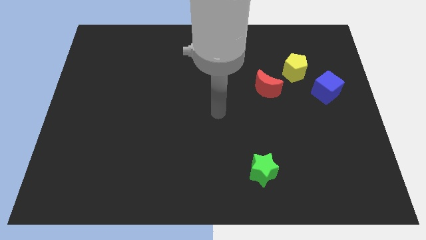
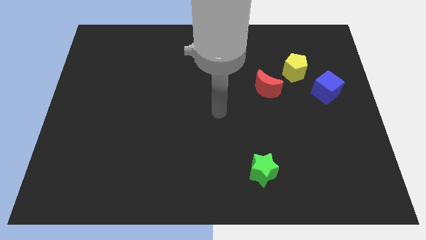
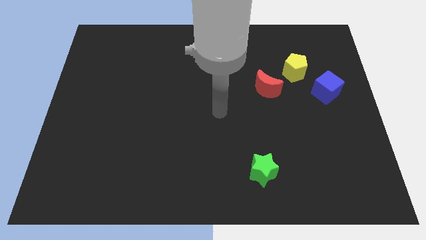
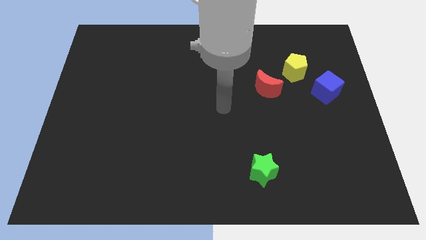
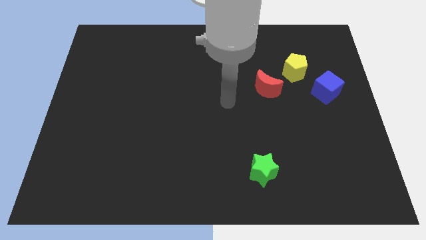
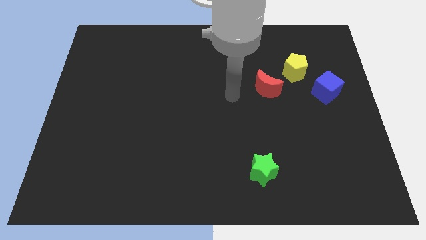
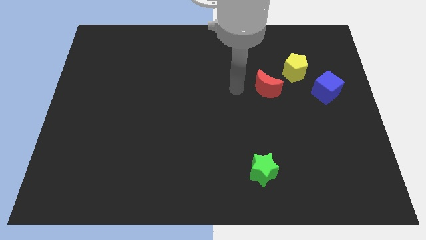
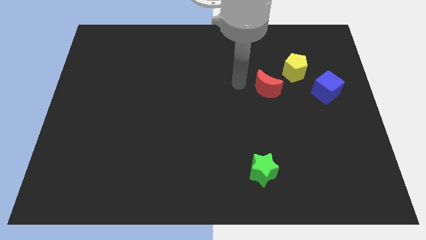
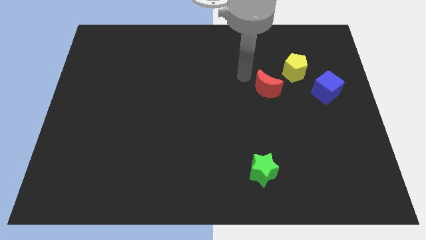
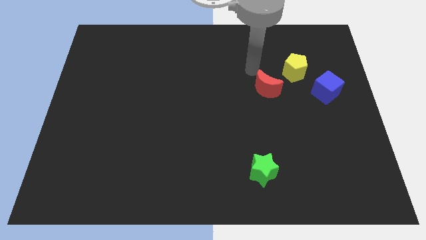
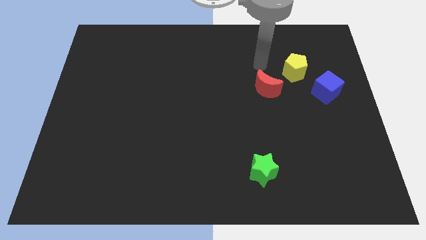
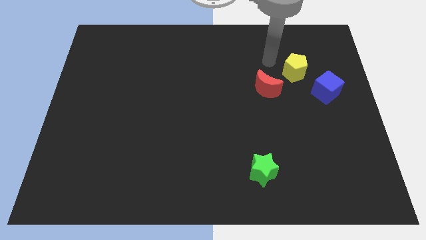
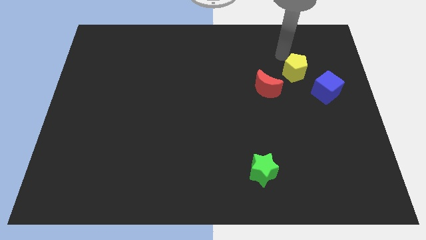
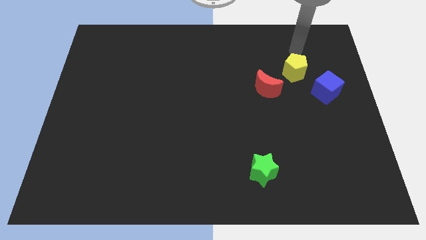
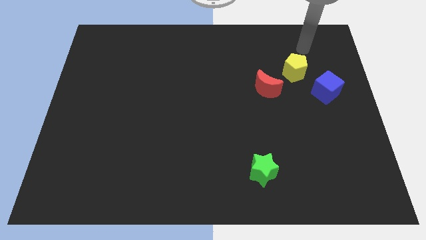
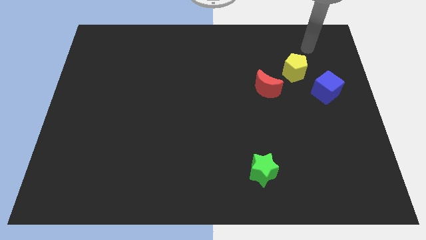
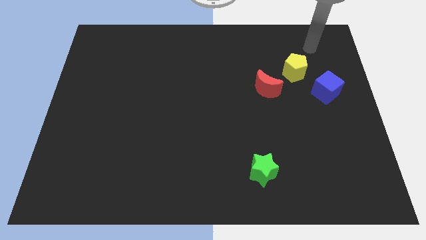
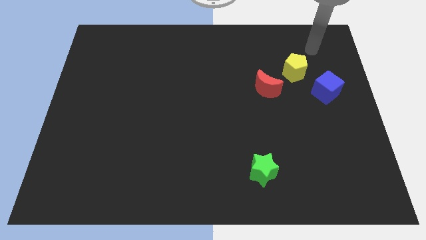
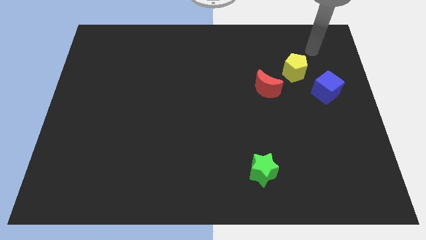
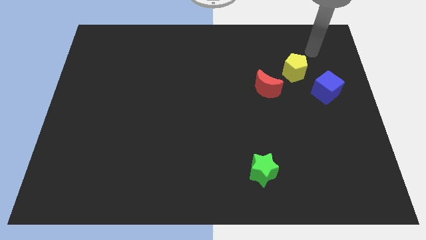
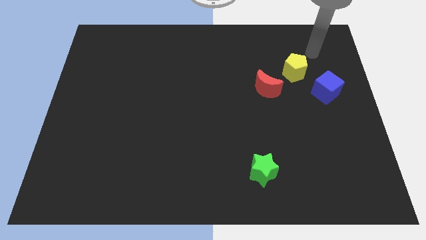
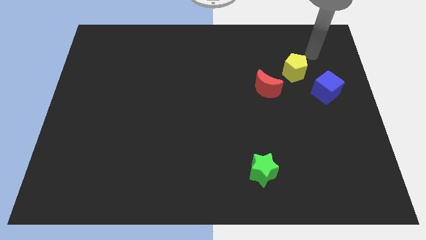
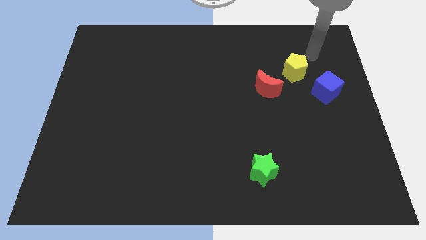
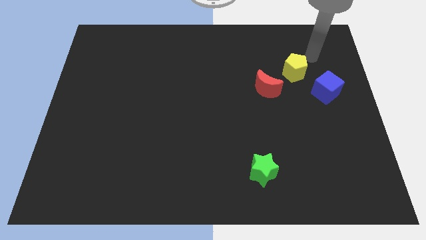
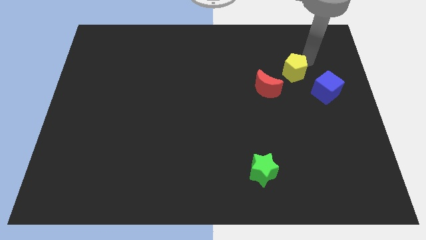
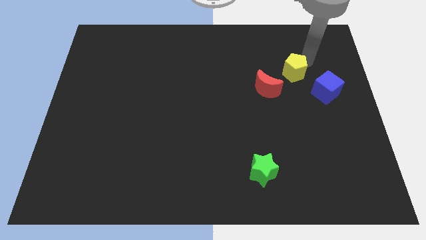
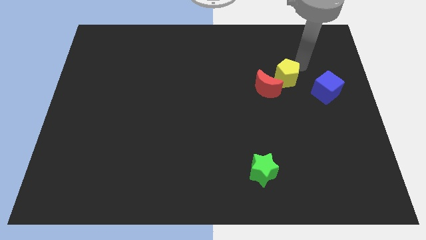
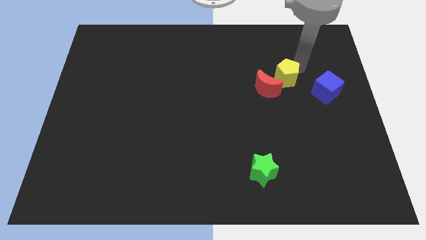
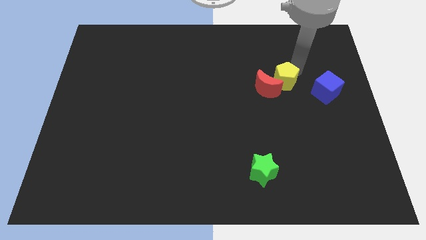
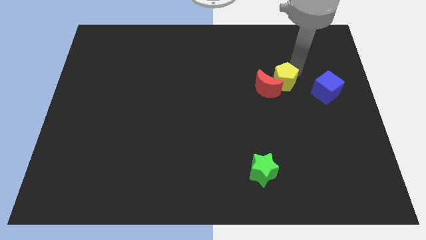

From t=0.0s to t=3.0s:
put the pentagon close to the moon

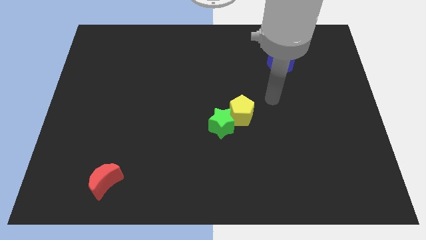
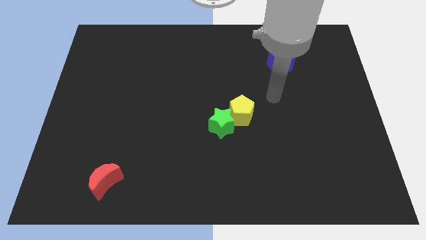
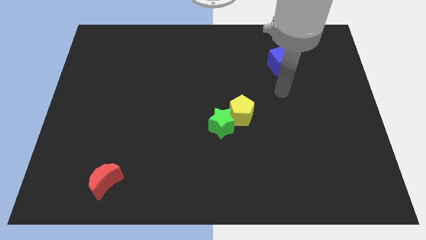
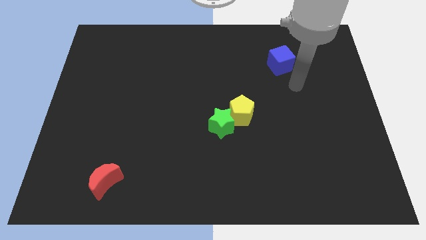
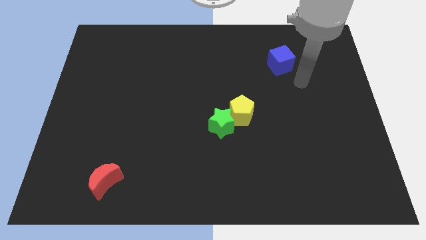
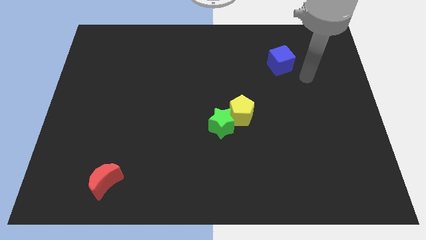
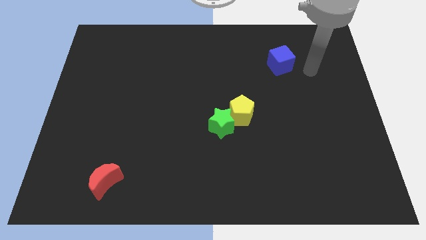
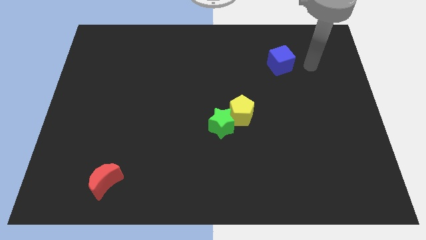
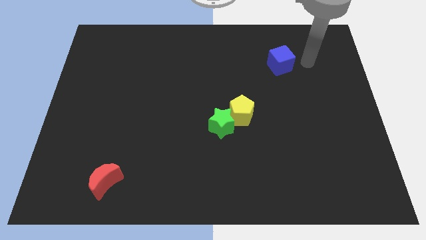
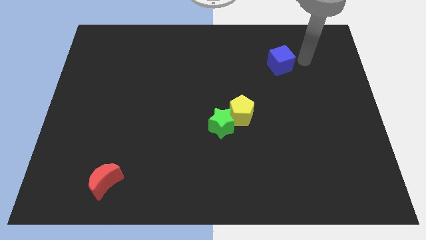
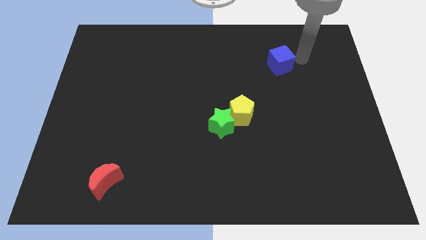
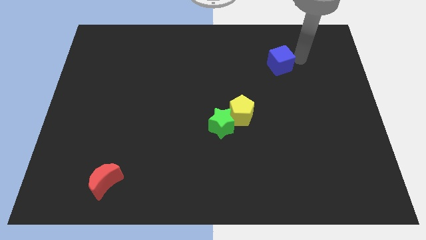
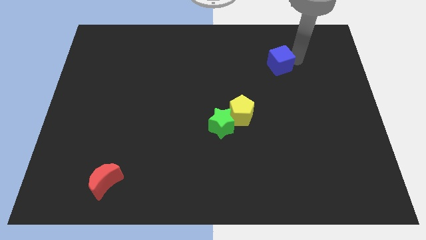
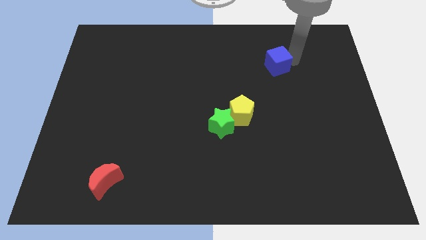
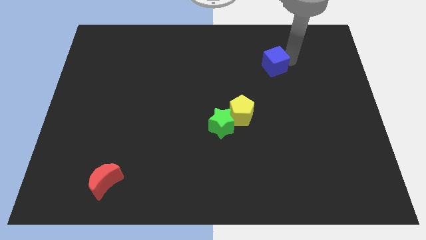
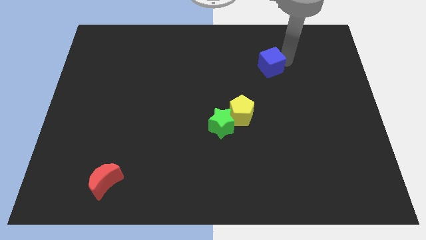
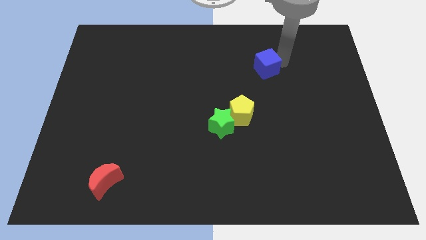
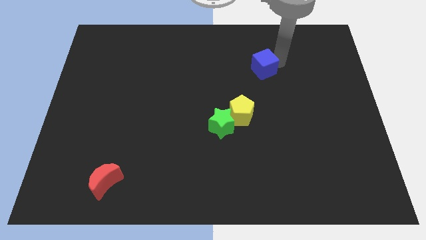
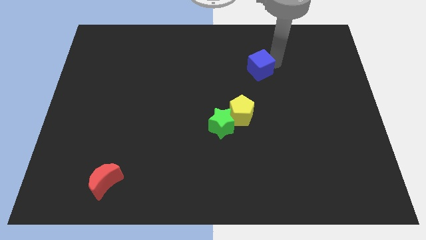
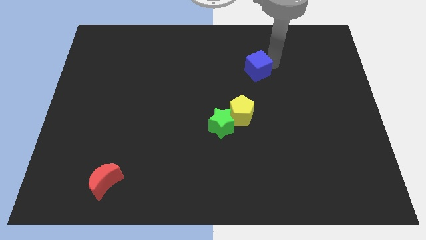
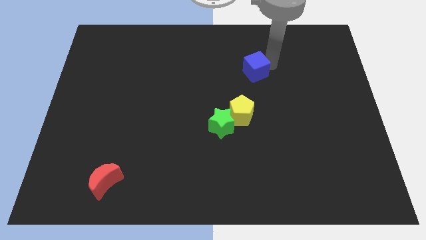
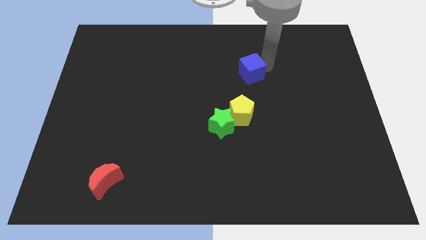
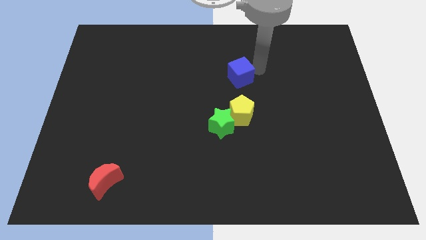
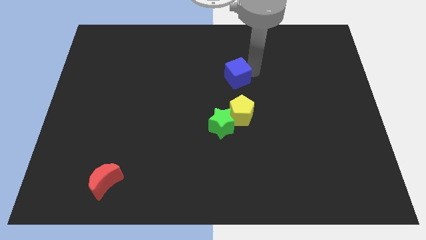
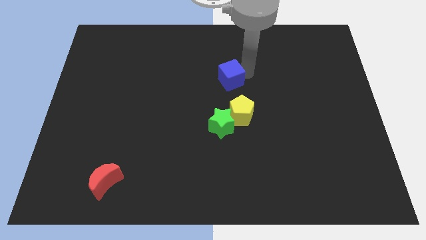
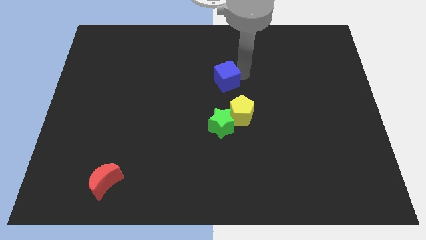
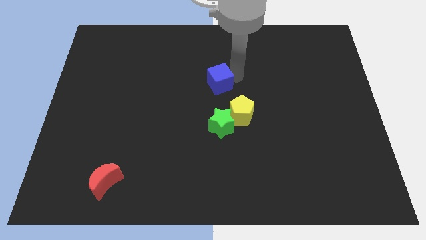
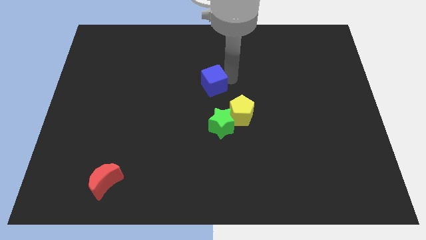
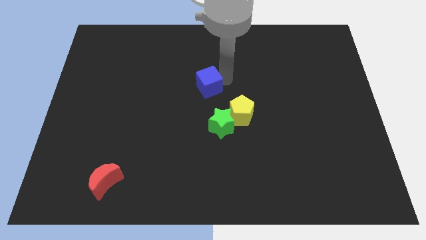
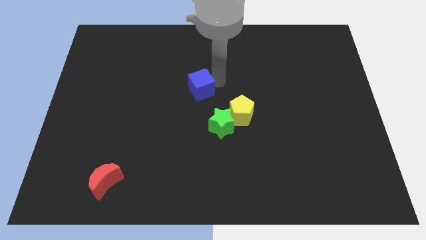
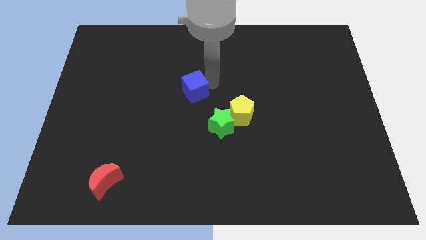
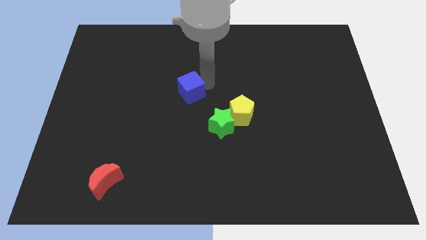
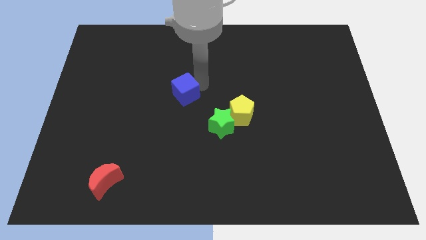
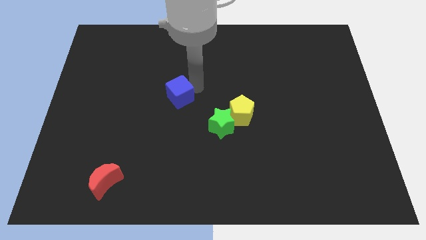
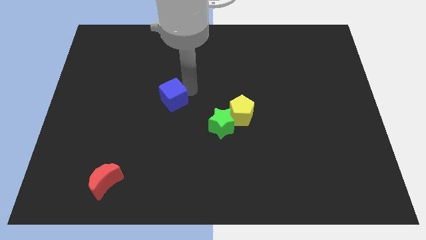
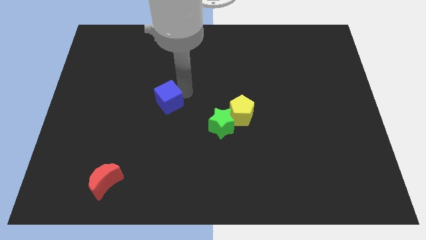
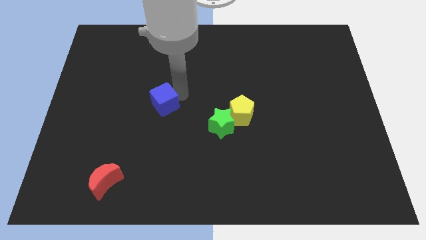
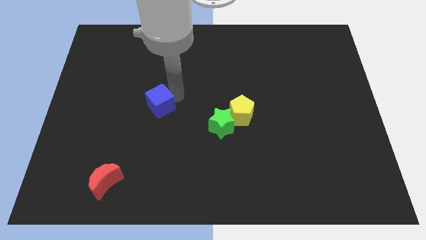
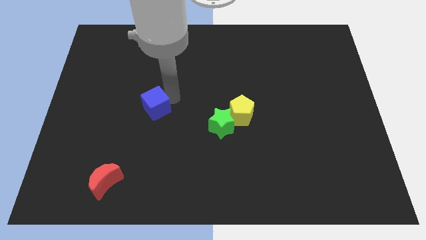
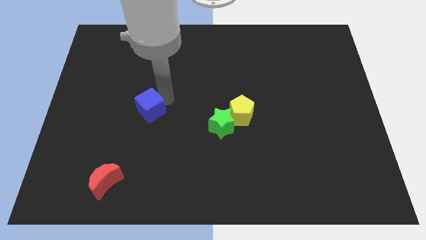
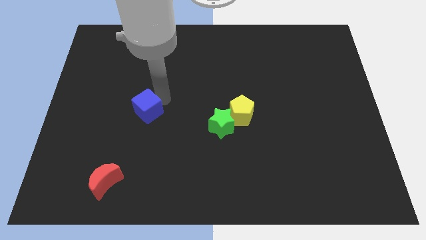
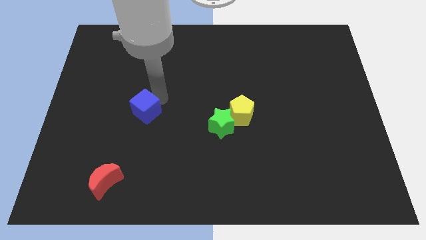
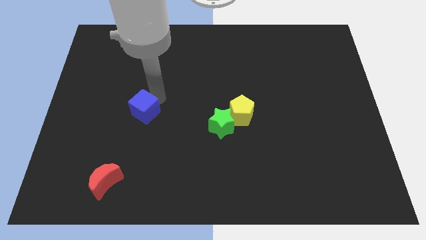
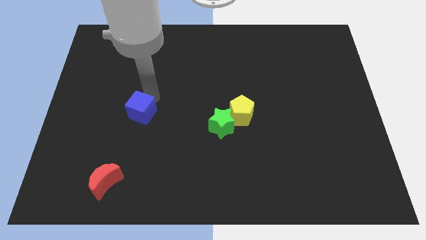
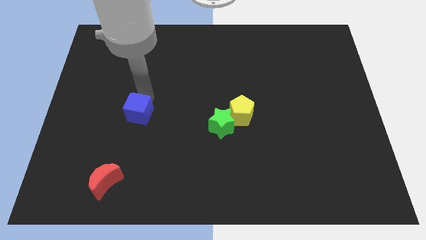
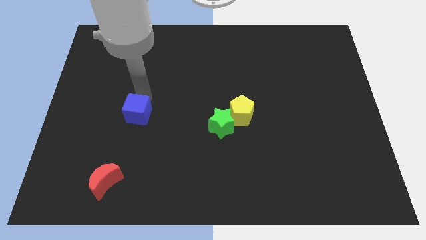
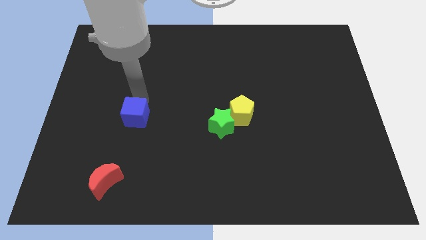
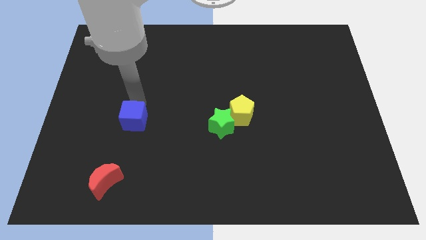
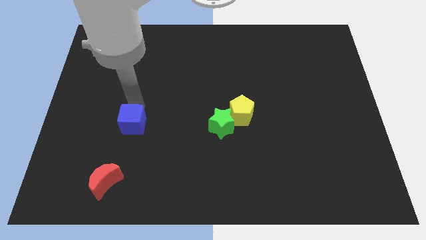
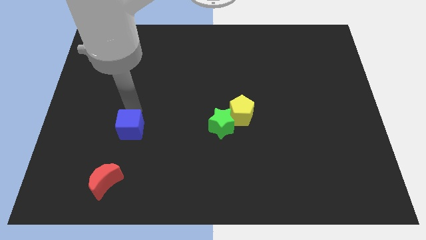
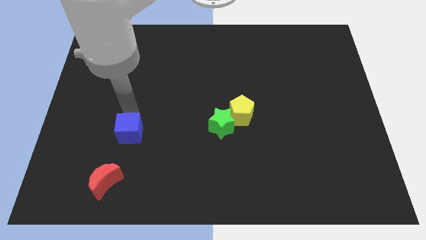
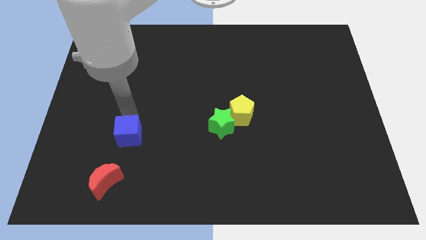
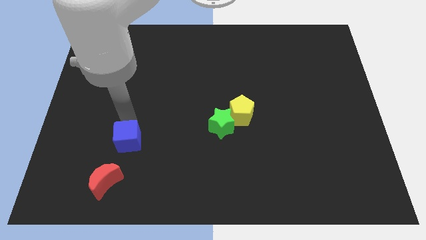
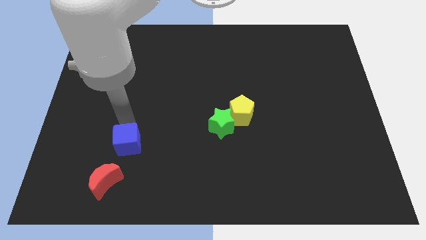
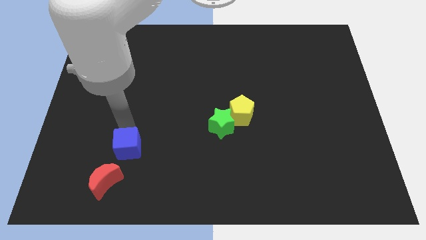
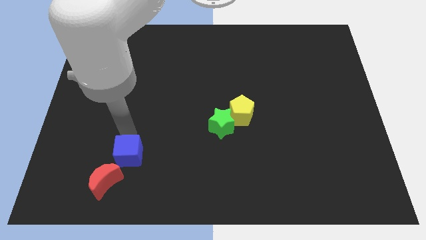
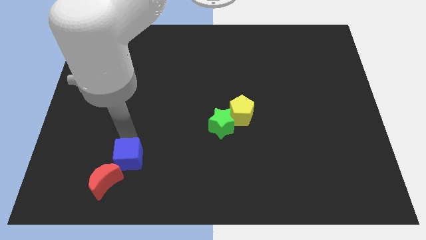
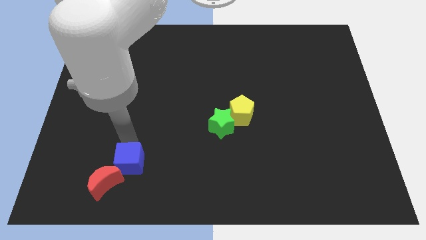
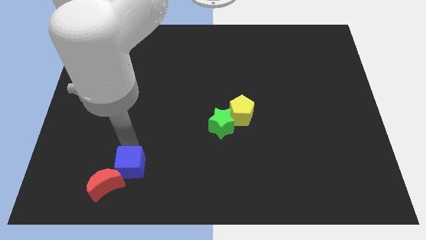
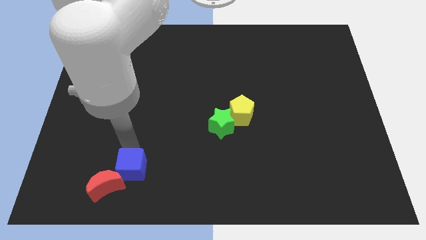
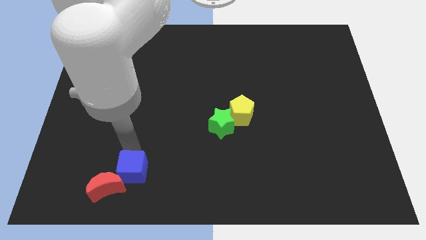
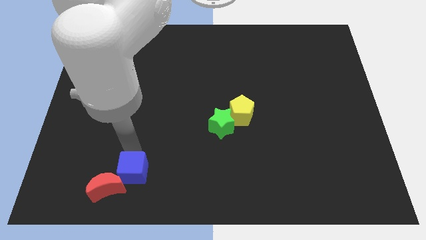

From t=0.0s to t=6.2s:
put the cube towards the moon
